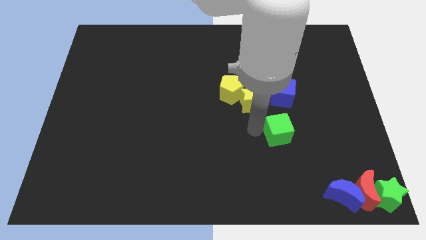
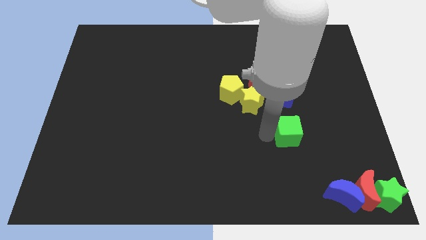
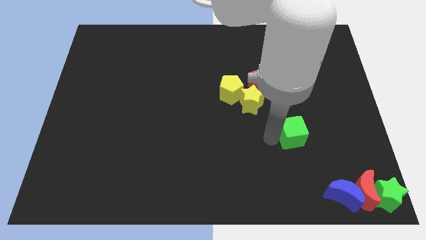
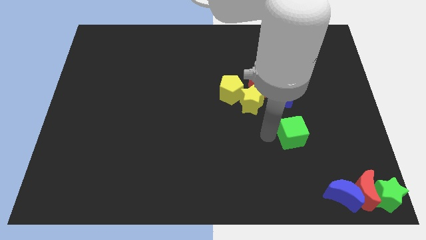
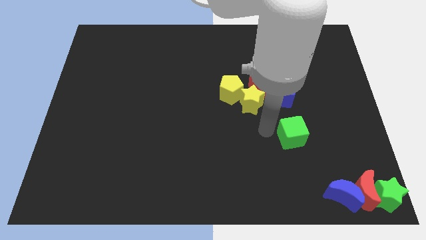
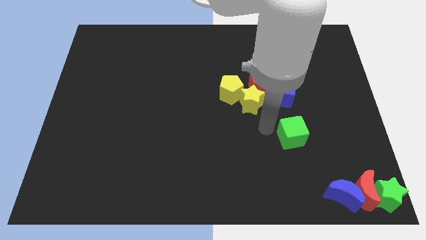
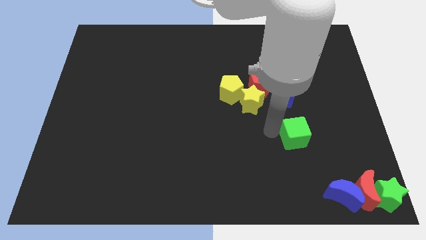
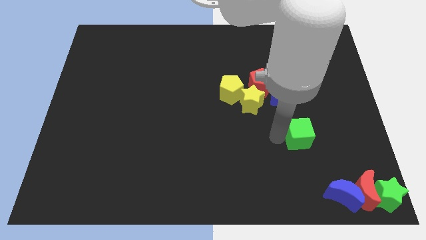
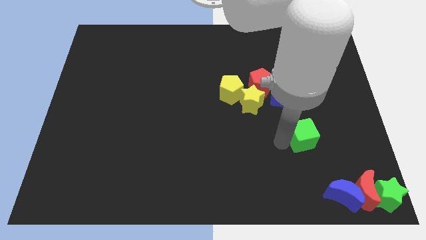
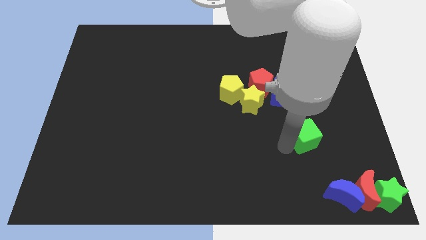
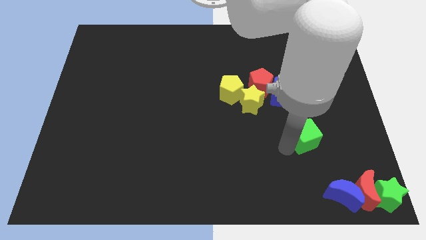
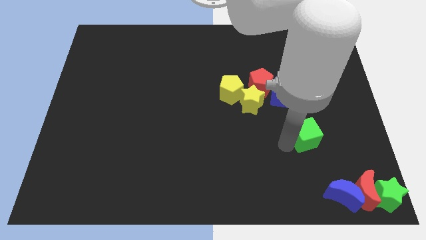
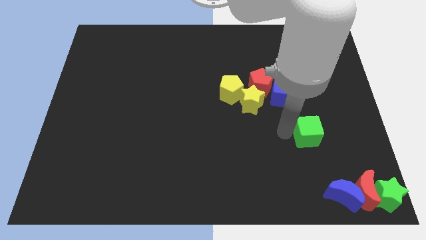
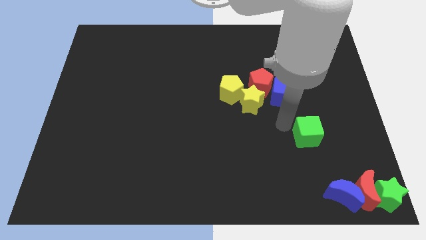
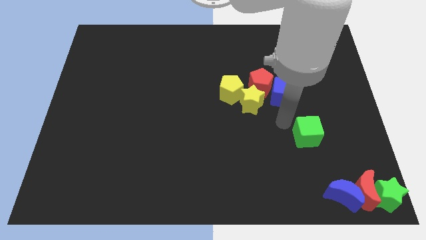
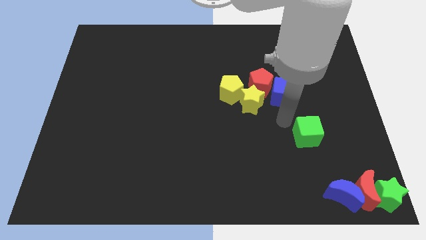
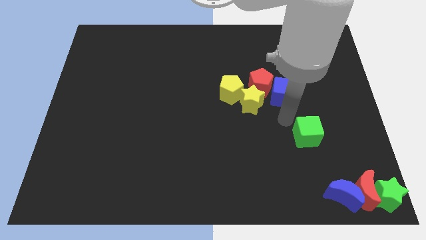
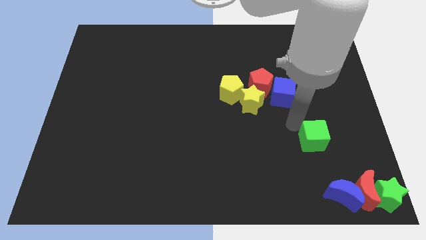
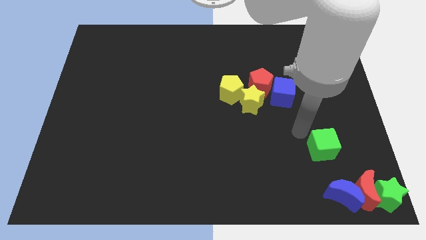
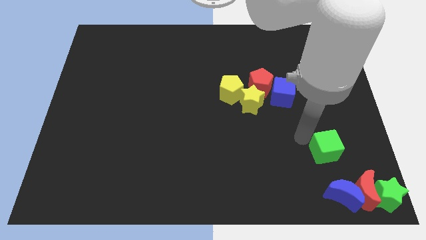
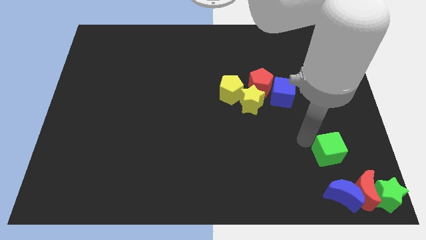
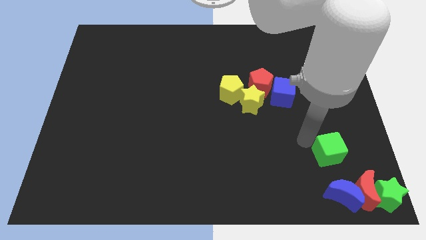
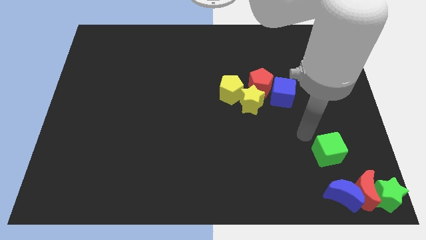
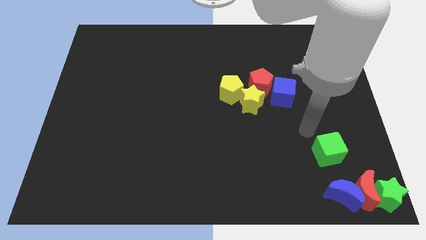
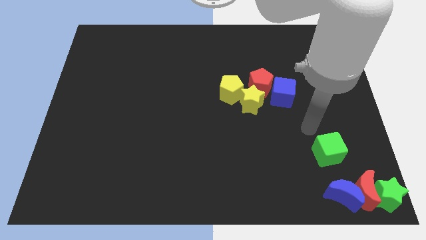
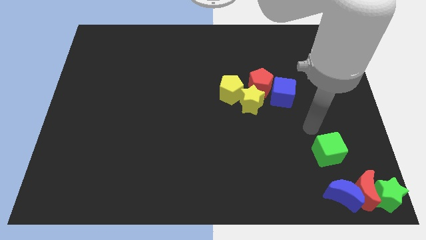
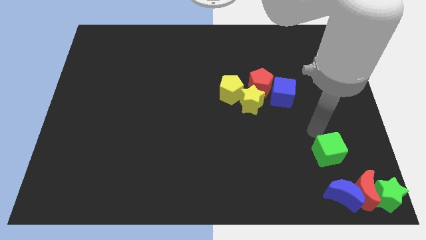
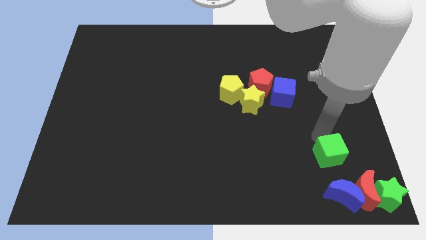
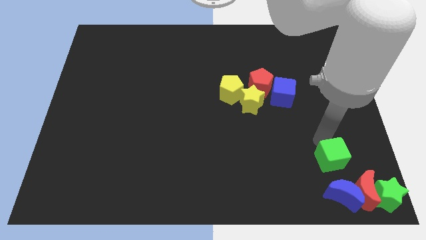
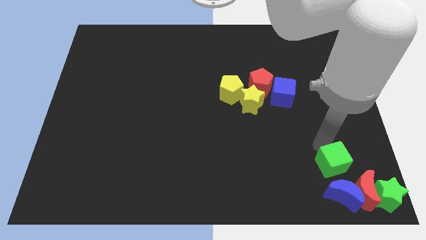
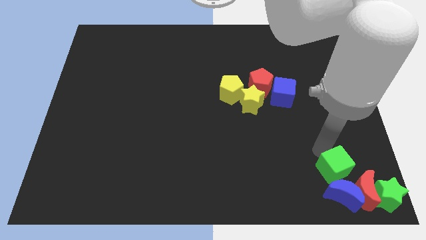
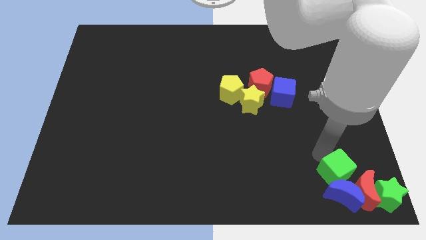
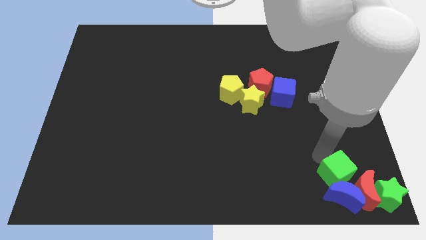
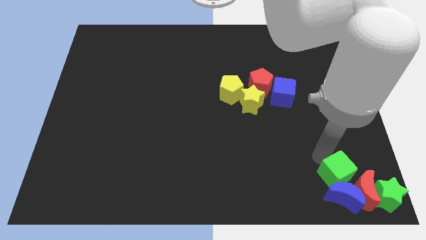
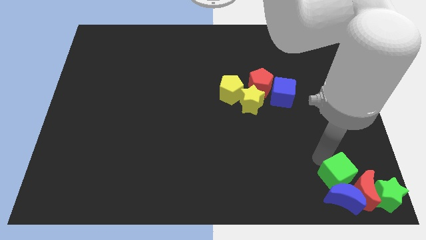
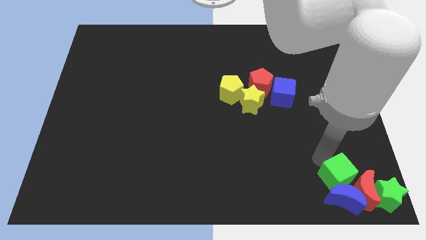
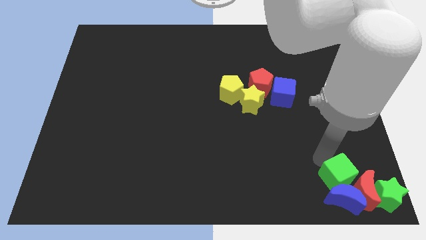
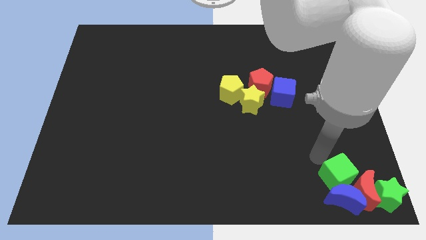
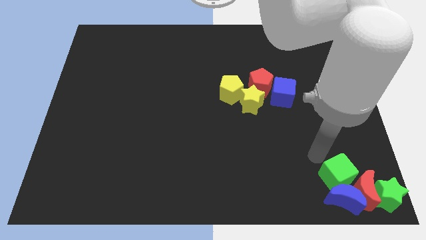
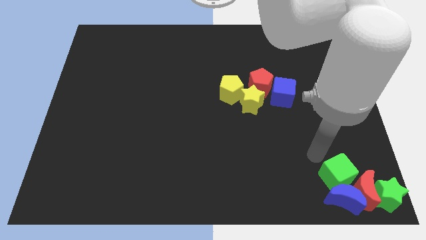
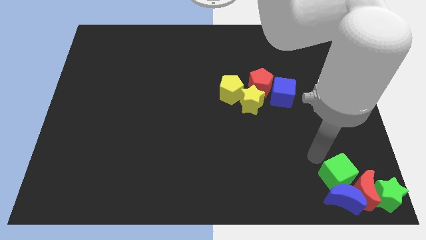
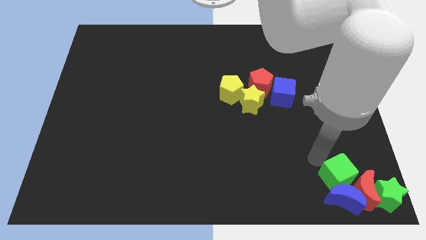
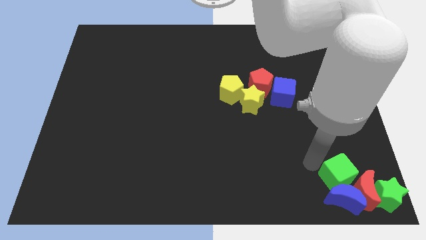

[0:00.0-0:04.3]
place the green cube above the blue crescent

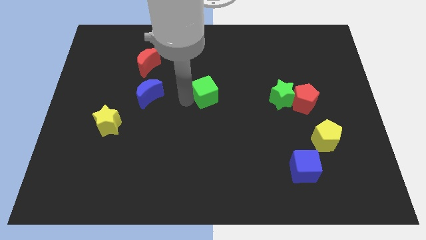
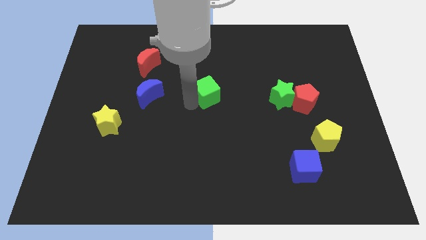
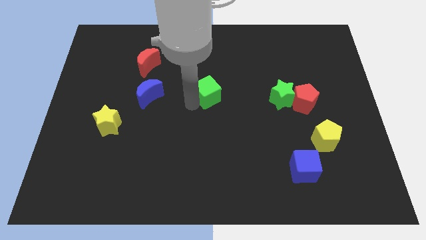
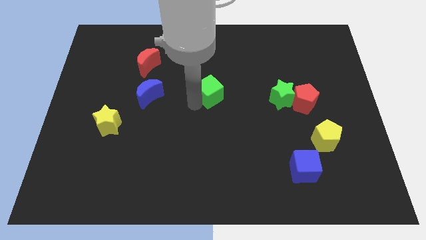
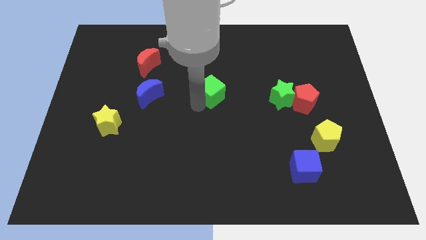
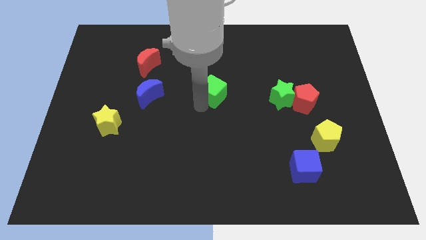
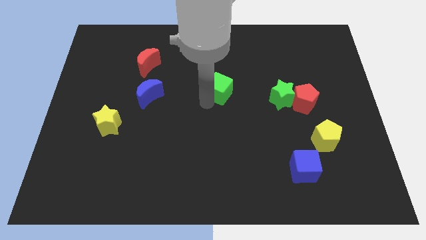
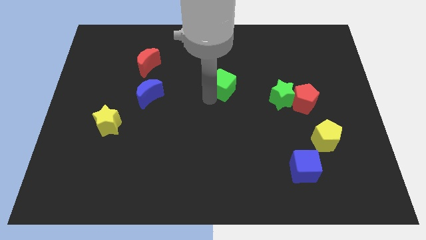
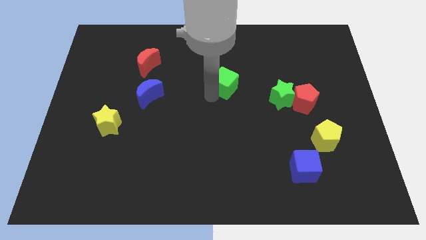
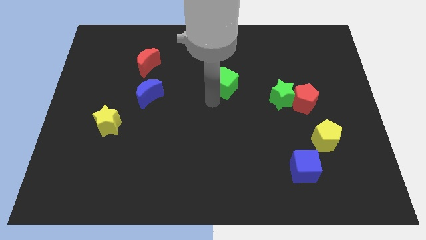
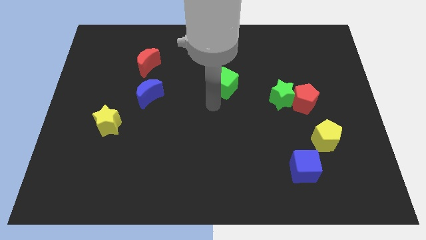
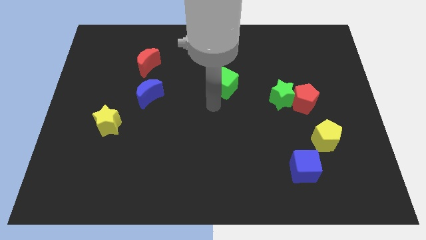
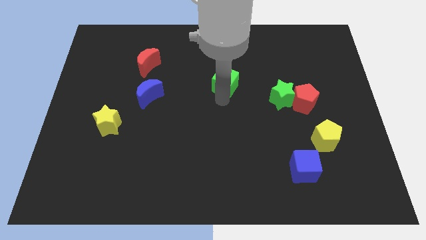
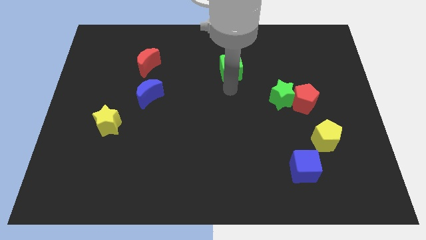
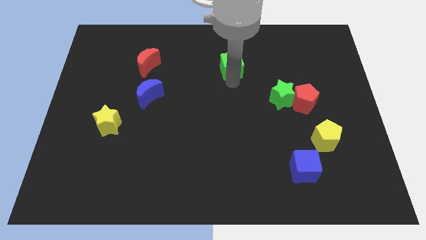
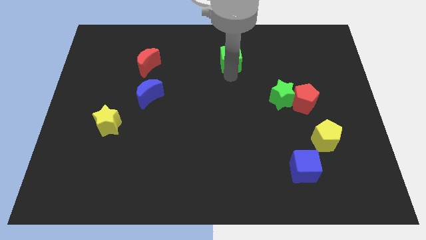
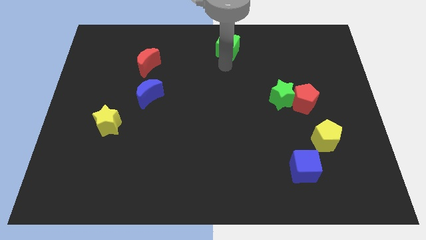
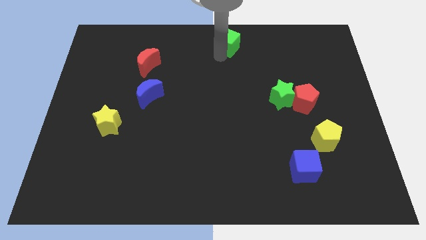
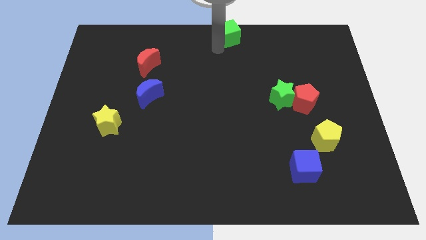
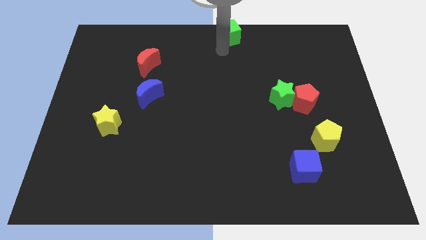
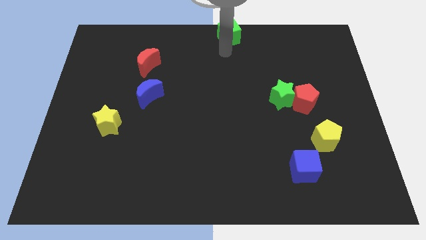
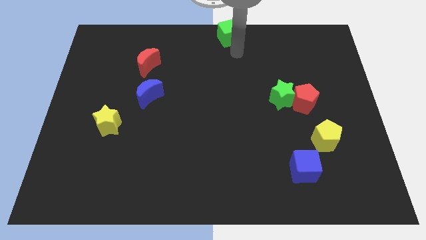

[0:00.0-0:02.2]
push the green cube to the top center

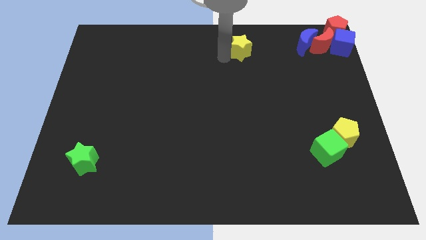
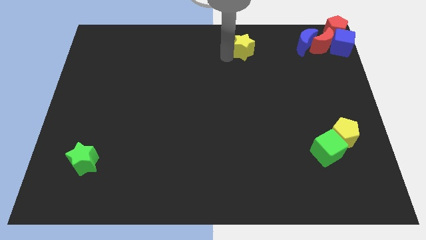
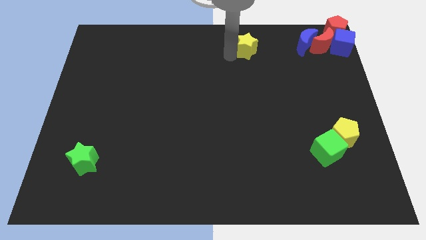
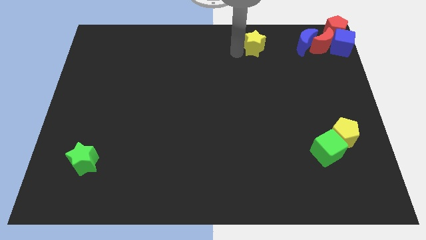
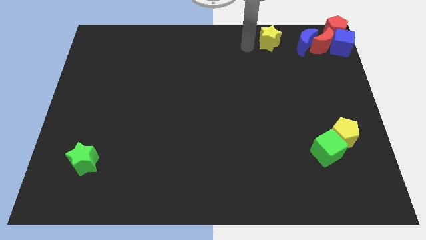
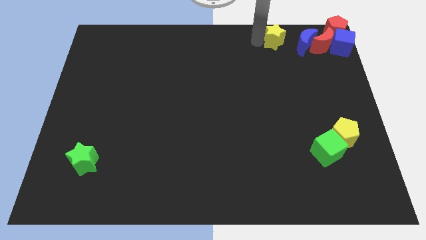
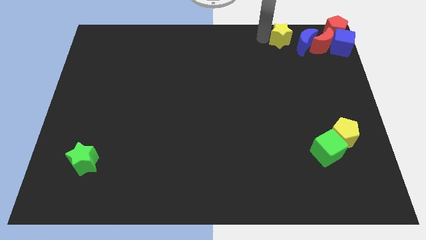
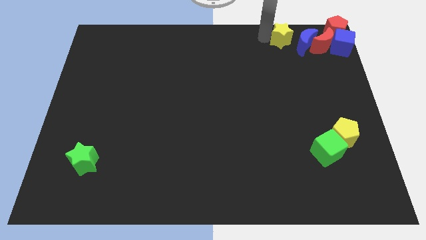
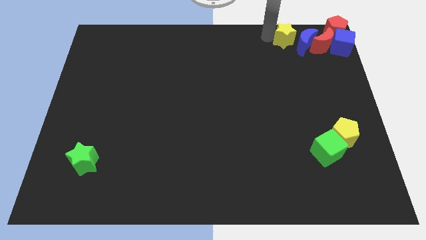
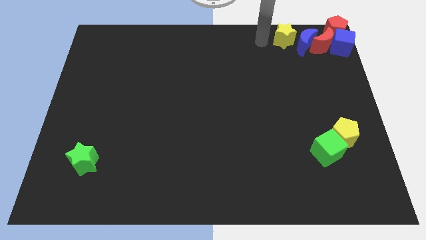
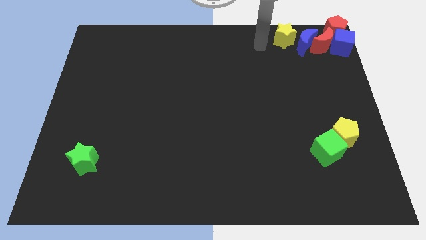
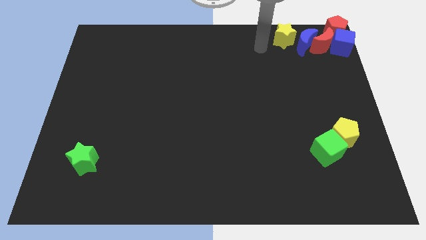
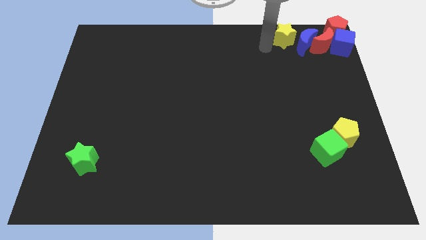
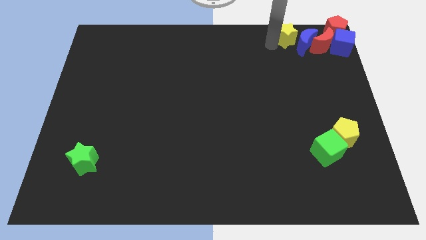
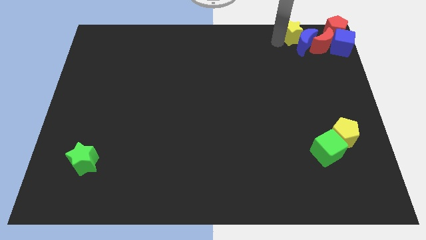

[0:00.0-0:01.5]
place the yellow star to the top right of the board

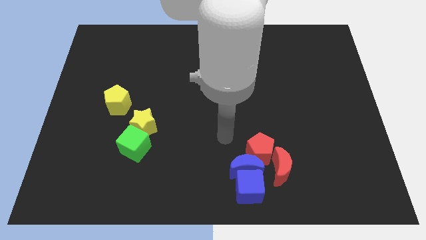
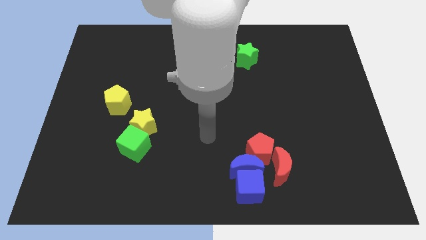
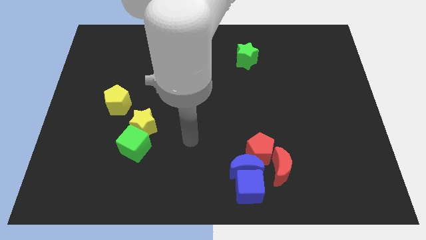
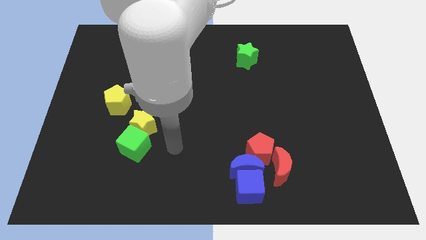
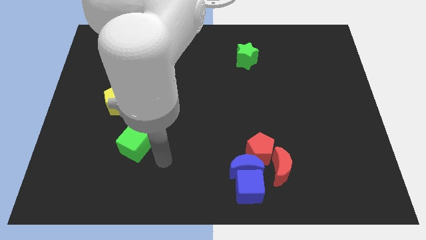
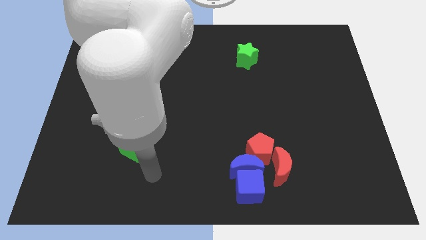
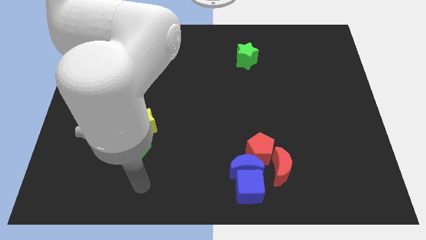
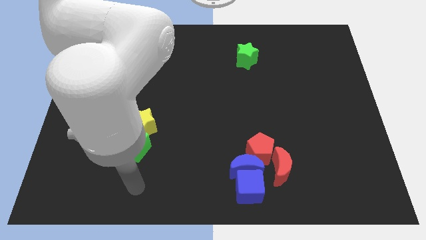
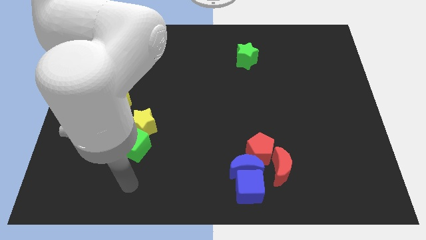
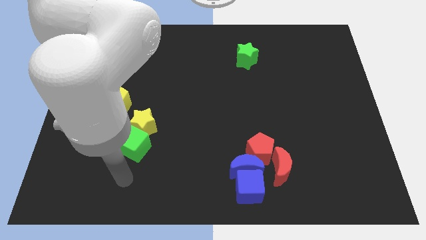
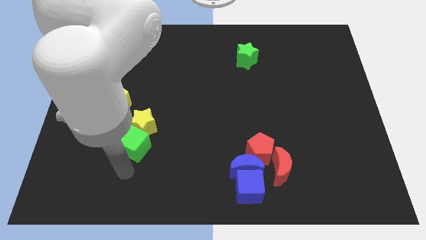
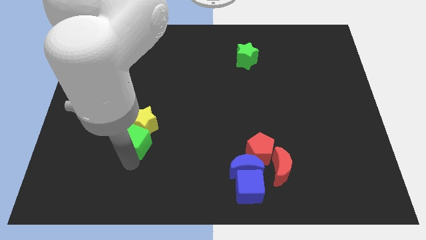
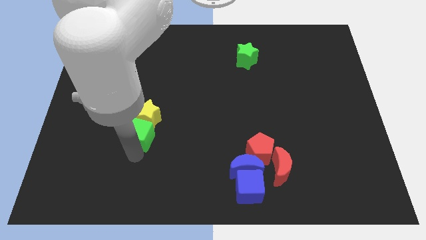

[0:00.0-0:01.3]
push the yellow star and green cube slightly to the top side of the board
